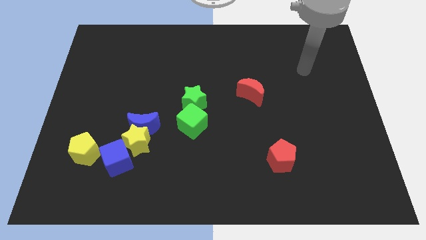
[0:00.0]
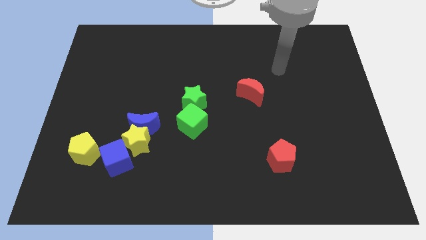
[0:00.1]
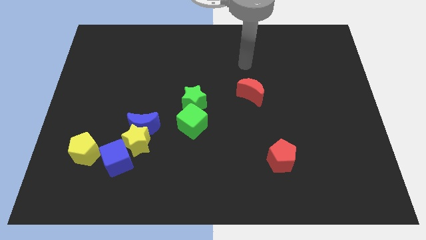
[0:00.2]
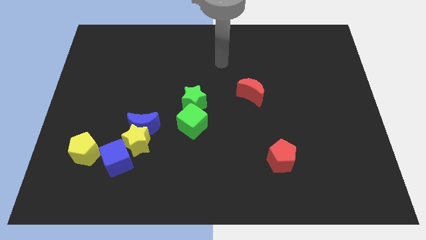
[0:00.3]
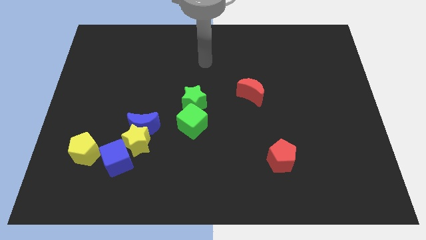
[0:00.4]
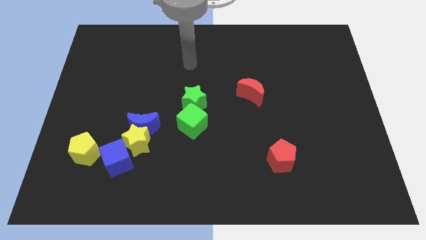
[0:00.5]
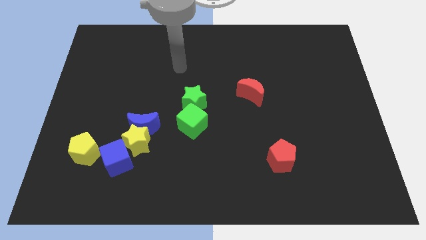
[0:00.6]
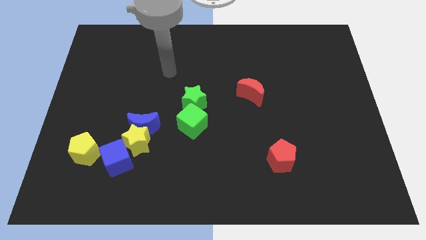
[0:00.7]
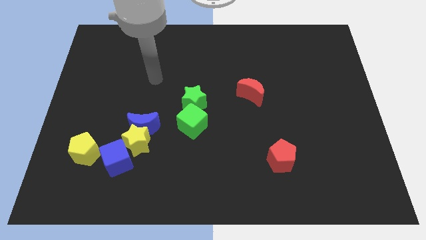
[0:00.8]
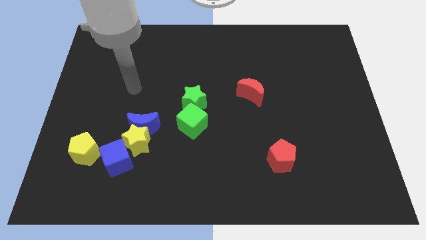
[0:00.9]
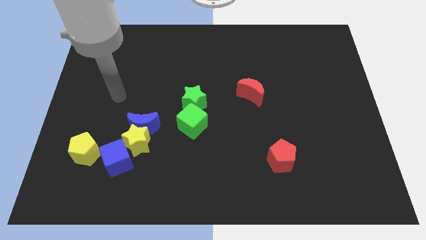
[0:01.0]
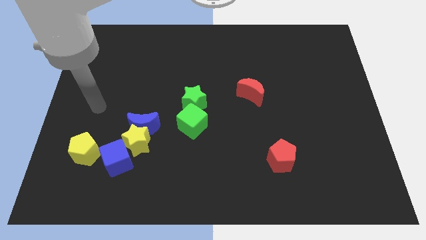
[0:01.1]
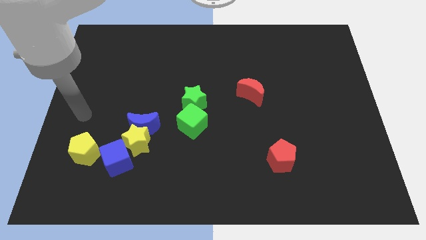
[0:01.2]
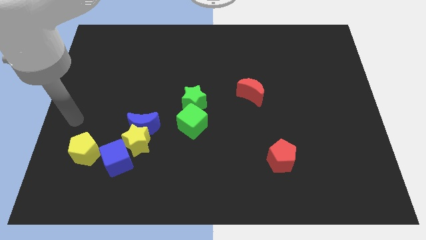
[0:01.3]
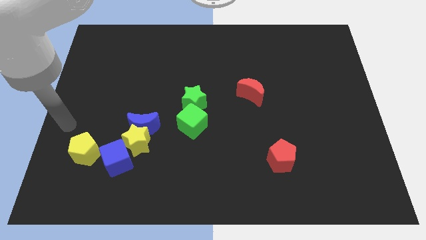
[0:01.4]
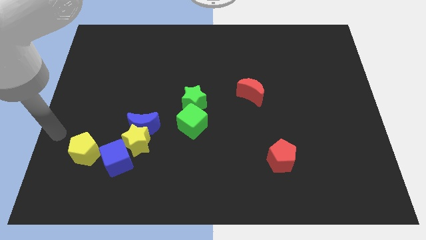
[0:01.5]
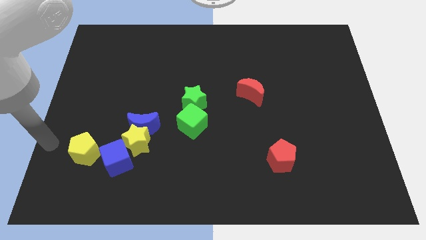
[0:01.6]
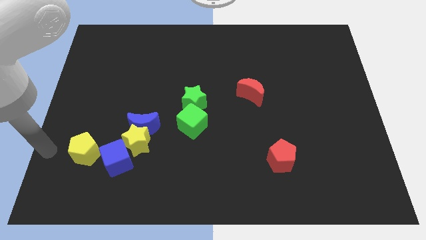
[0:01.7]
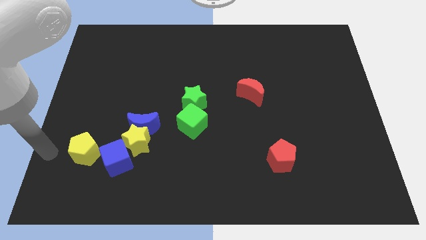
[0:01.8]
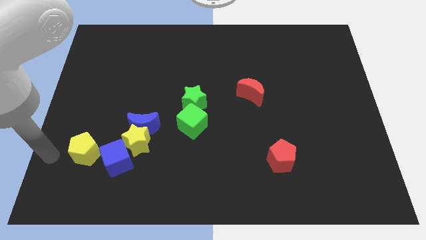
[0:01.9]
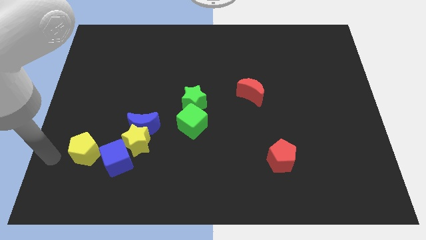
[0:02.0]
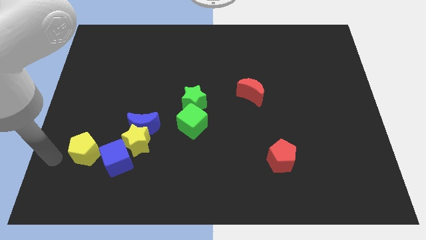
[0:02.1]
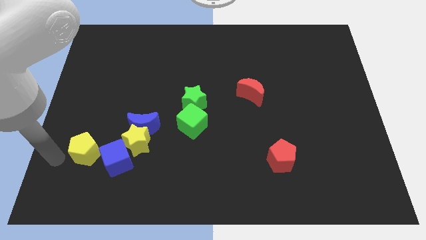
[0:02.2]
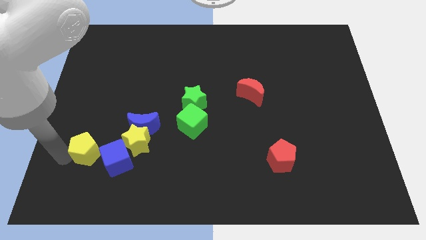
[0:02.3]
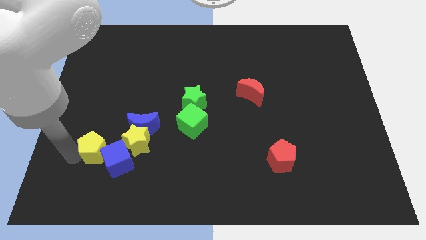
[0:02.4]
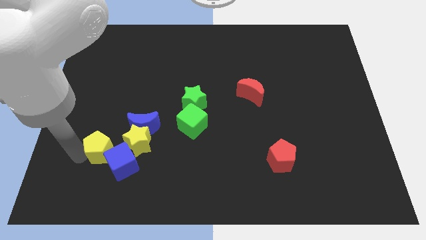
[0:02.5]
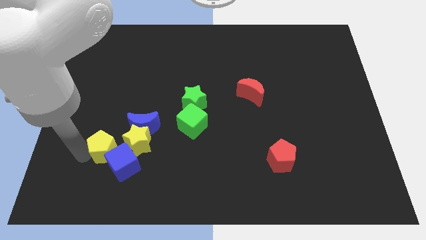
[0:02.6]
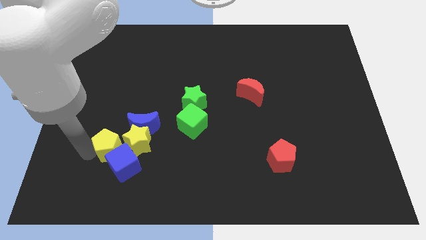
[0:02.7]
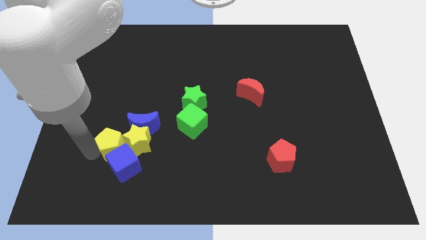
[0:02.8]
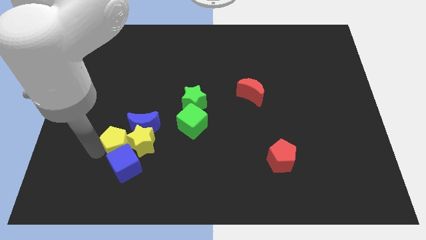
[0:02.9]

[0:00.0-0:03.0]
put the yellow pentagon towards the yellow star

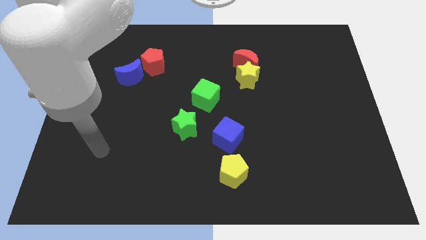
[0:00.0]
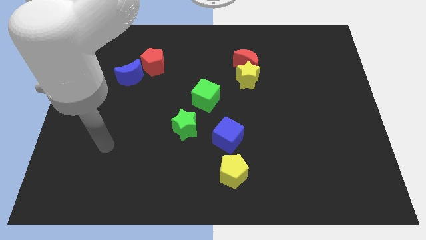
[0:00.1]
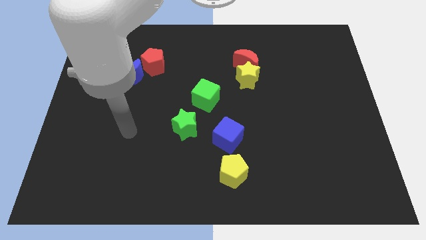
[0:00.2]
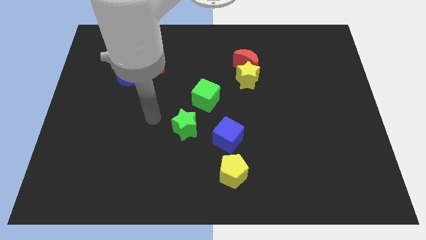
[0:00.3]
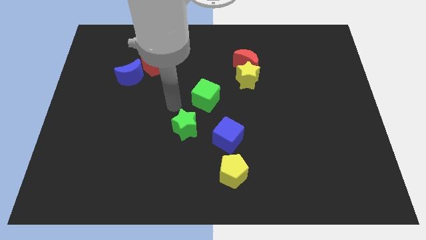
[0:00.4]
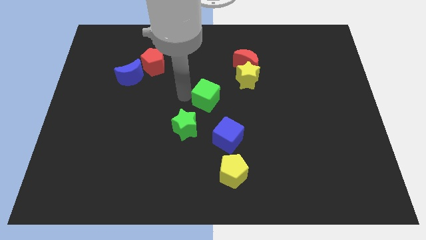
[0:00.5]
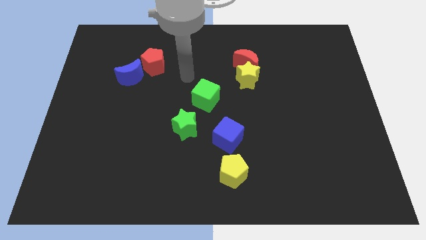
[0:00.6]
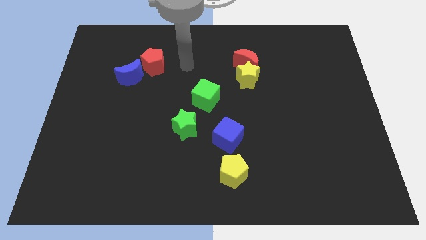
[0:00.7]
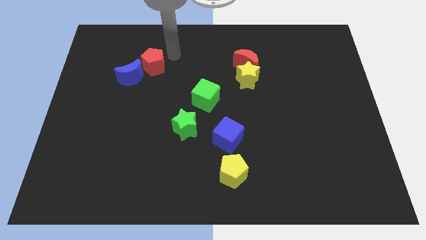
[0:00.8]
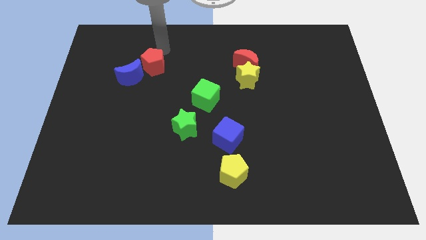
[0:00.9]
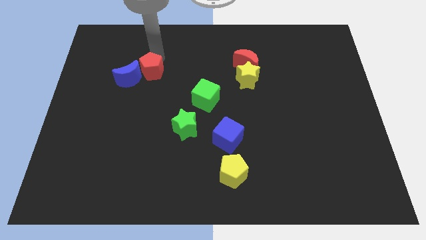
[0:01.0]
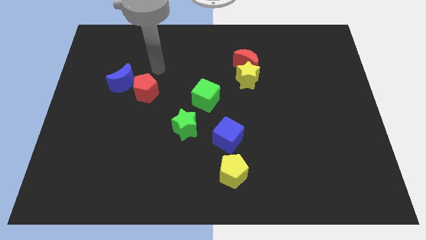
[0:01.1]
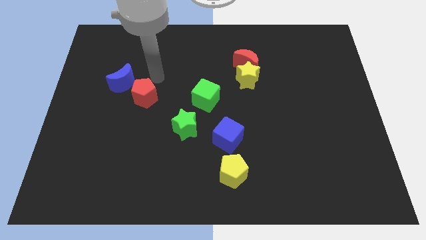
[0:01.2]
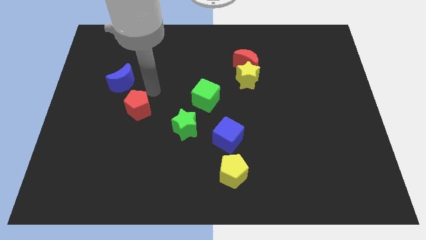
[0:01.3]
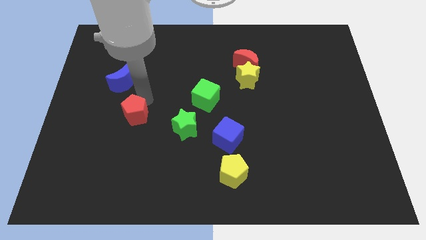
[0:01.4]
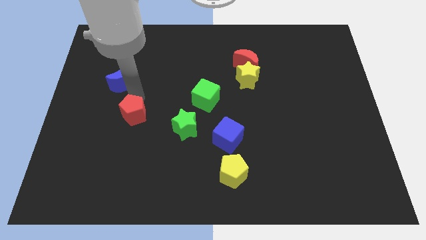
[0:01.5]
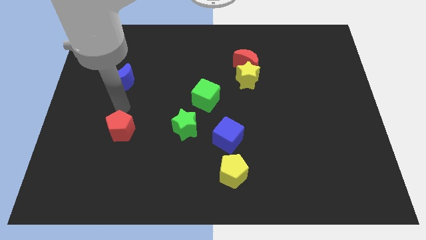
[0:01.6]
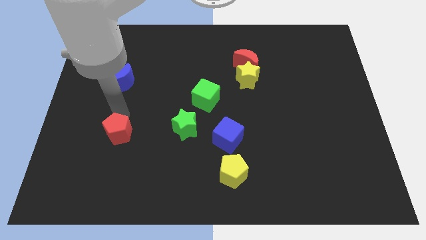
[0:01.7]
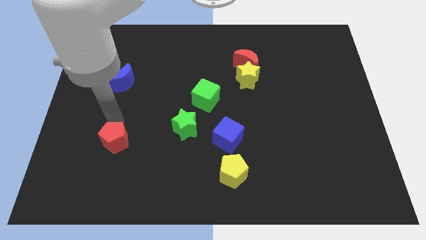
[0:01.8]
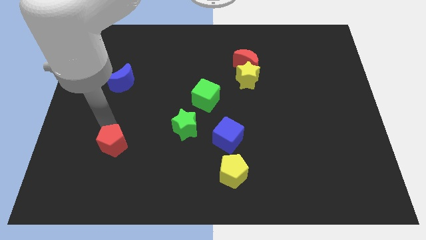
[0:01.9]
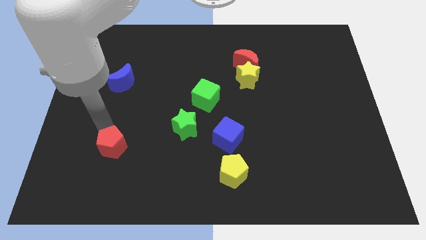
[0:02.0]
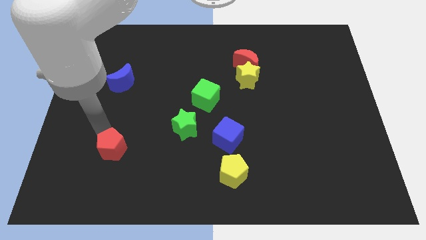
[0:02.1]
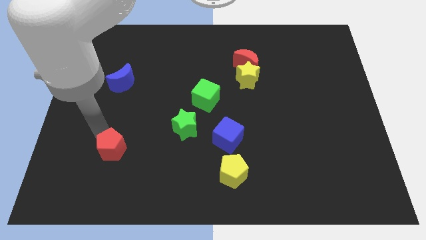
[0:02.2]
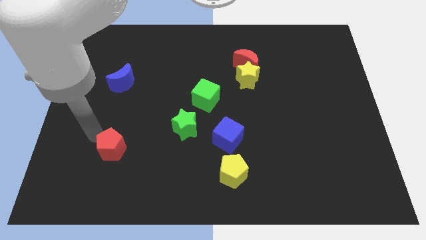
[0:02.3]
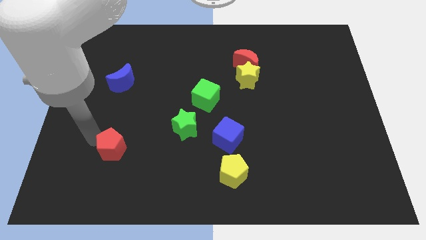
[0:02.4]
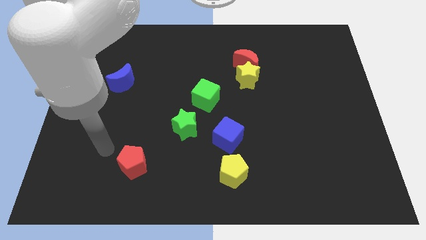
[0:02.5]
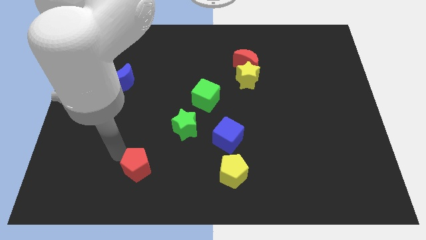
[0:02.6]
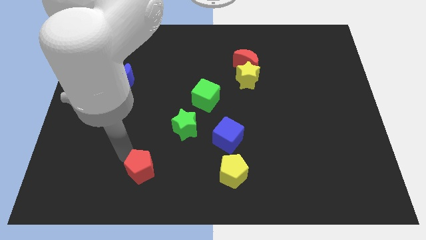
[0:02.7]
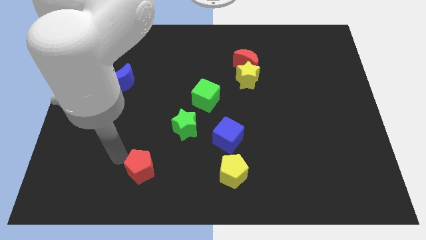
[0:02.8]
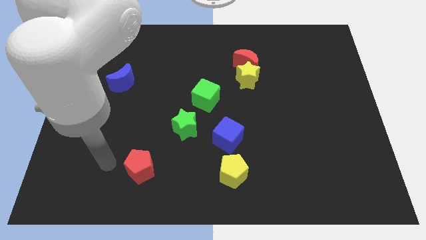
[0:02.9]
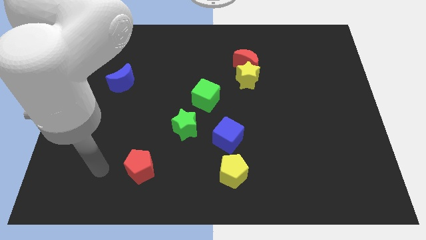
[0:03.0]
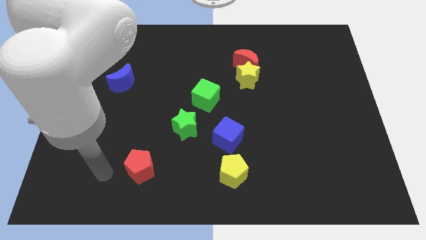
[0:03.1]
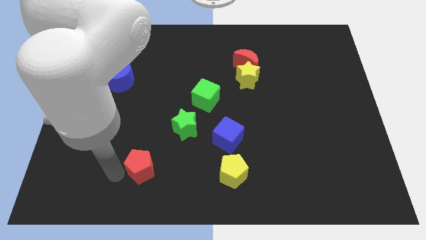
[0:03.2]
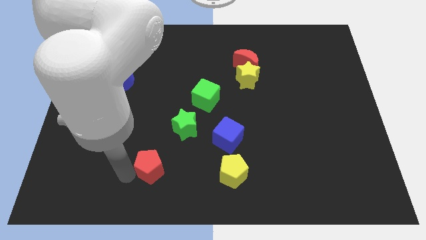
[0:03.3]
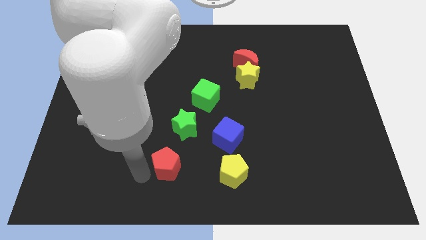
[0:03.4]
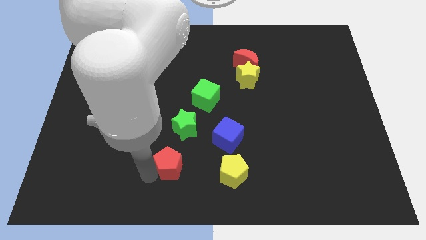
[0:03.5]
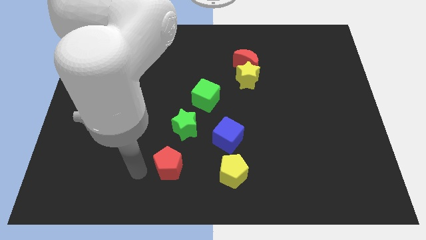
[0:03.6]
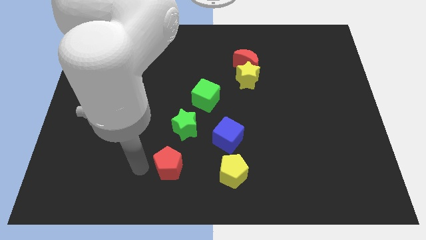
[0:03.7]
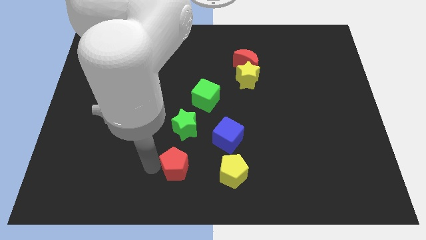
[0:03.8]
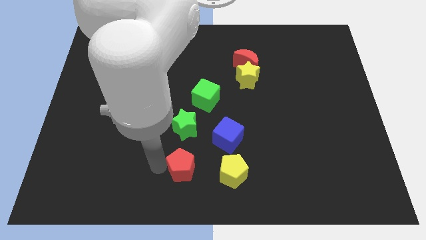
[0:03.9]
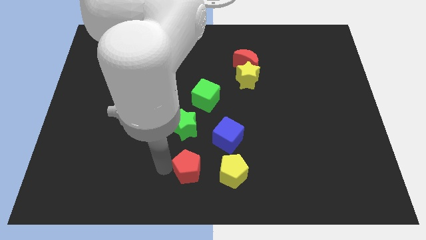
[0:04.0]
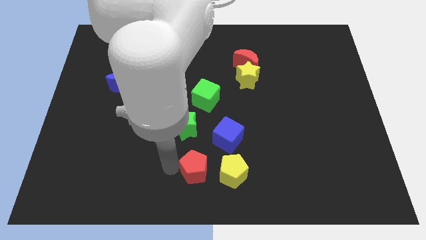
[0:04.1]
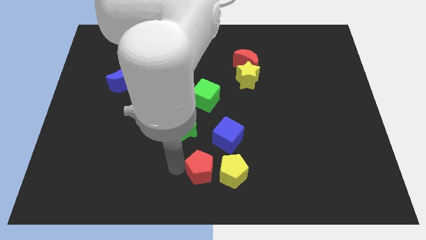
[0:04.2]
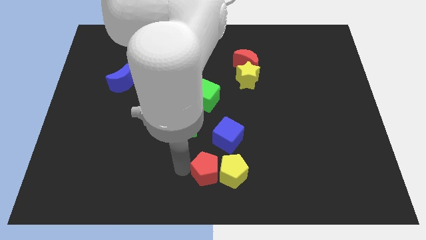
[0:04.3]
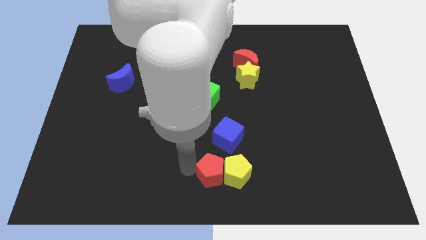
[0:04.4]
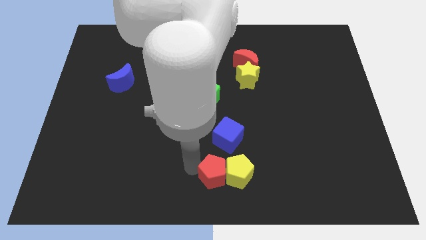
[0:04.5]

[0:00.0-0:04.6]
move the red pentagon close to the yellow pentagon

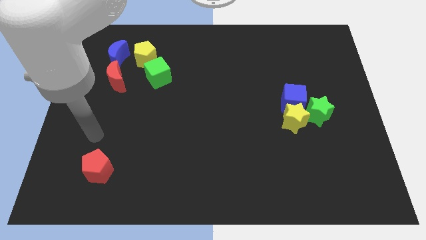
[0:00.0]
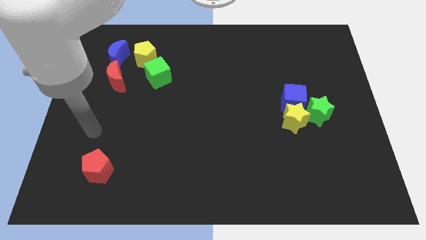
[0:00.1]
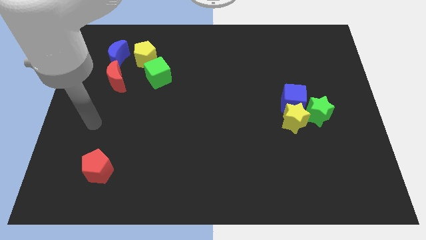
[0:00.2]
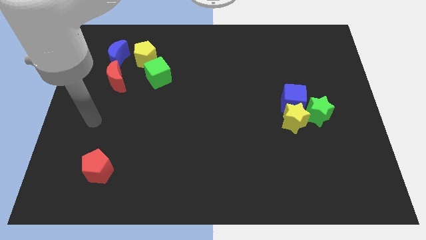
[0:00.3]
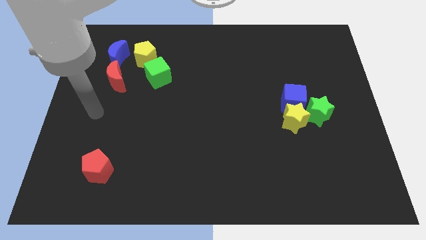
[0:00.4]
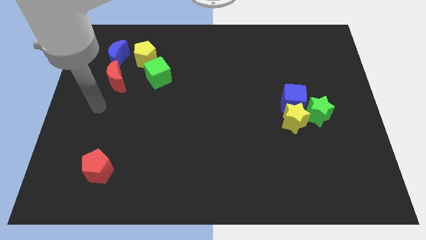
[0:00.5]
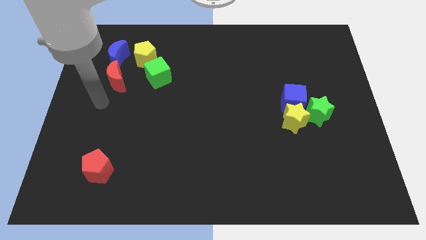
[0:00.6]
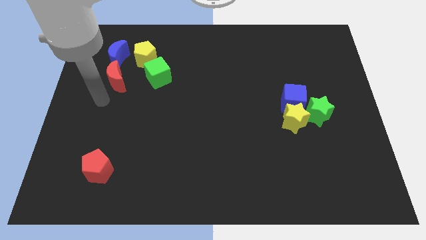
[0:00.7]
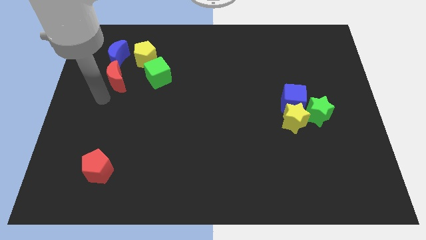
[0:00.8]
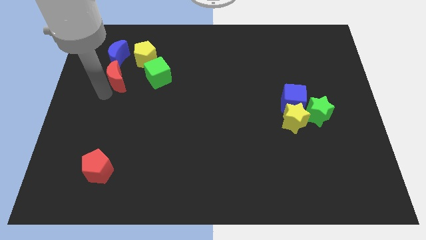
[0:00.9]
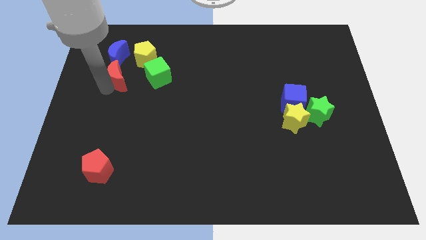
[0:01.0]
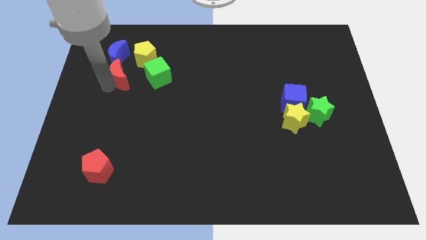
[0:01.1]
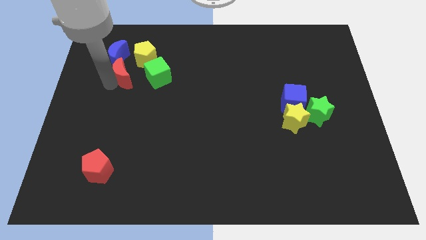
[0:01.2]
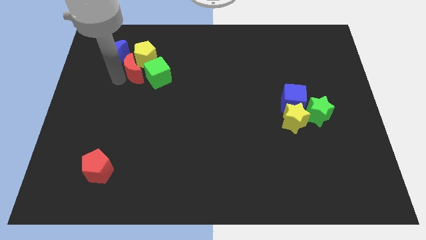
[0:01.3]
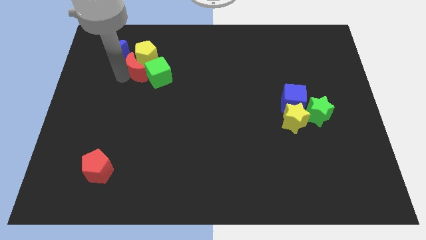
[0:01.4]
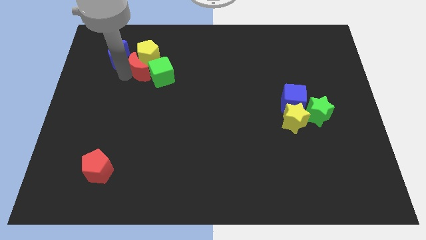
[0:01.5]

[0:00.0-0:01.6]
move the red moon to the yellow pentagon
